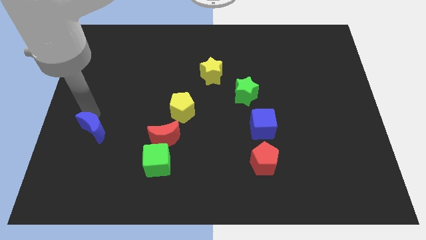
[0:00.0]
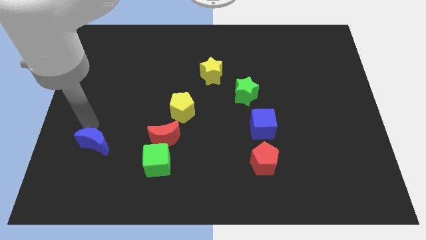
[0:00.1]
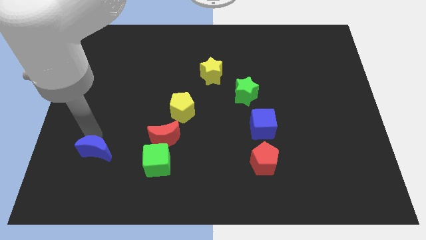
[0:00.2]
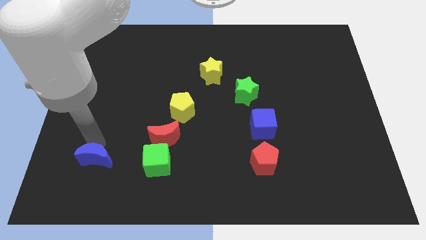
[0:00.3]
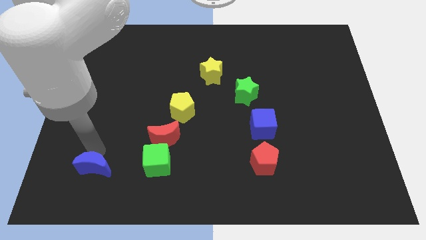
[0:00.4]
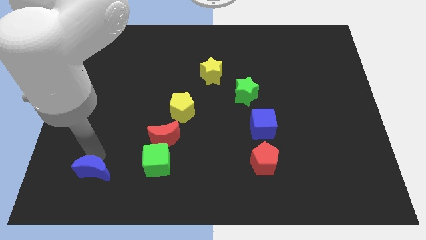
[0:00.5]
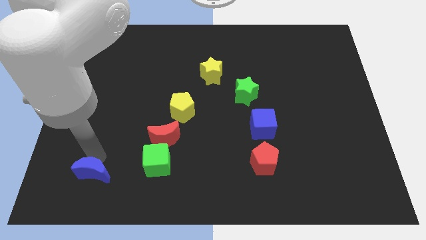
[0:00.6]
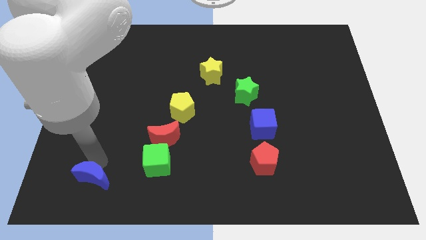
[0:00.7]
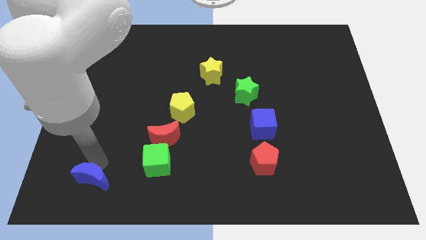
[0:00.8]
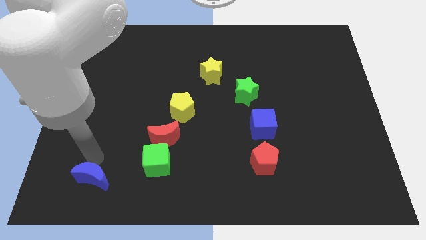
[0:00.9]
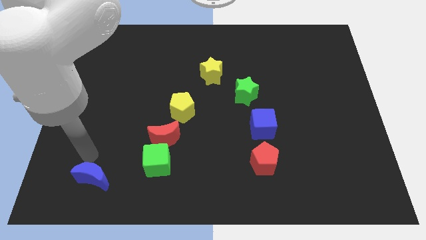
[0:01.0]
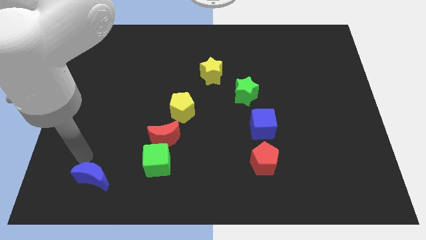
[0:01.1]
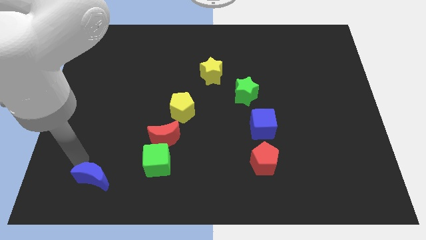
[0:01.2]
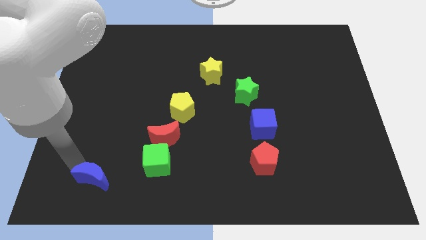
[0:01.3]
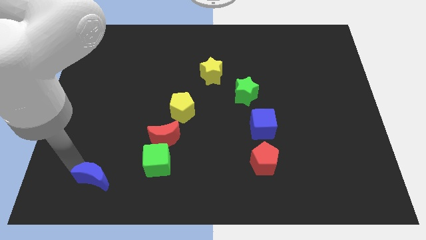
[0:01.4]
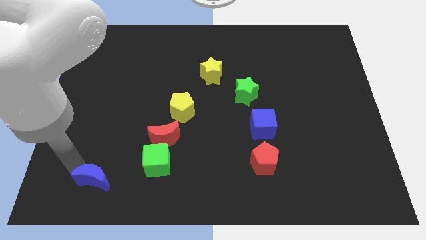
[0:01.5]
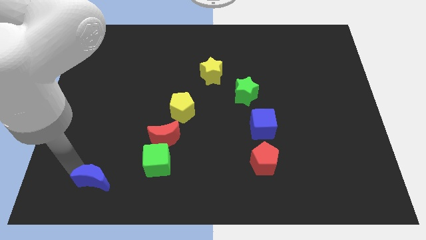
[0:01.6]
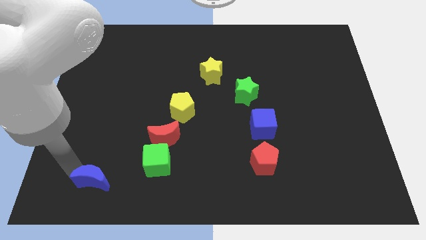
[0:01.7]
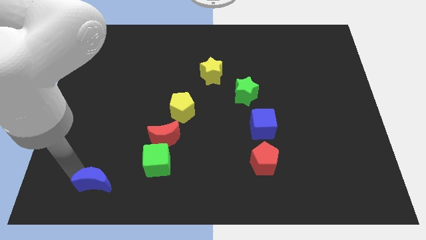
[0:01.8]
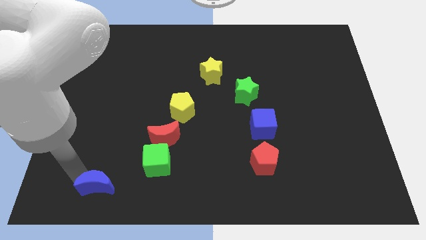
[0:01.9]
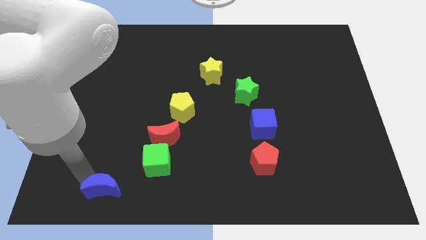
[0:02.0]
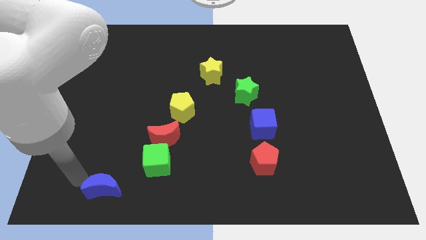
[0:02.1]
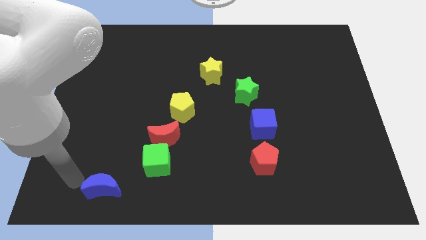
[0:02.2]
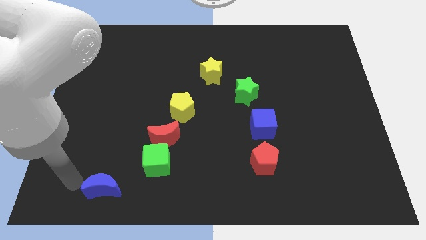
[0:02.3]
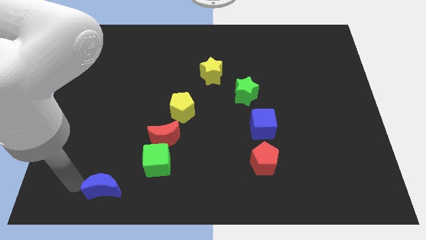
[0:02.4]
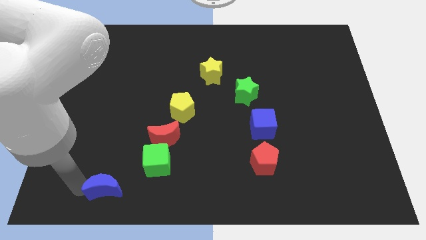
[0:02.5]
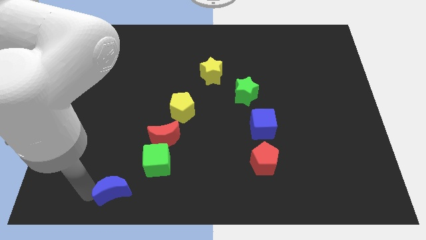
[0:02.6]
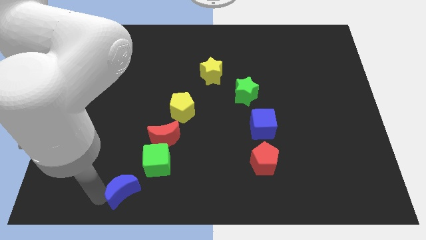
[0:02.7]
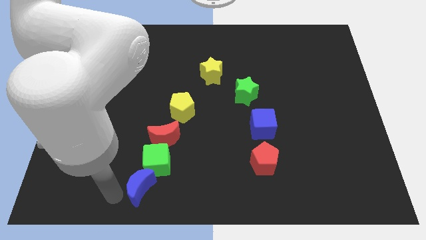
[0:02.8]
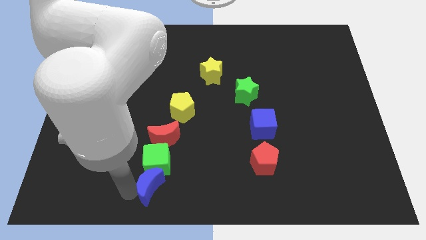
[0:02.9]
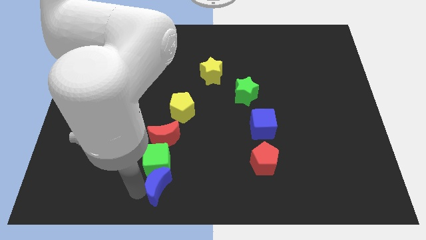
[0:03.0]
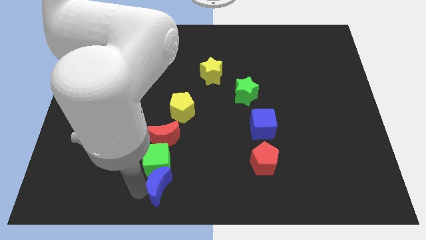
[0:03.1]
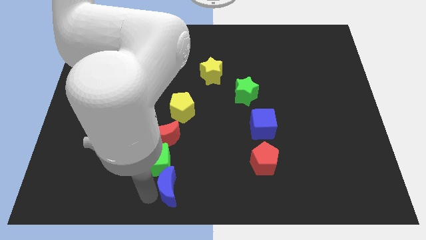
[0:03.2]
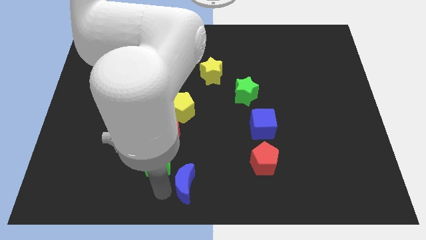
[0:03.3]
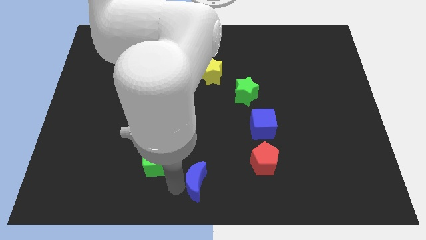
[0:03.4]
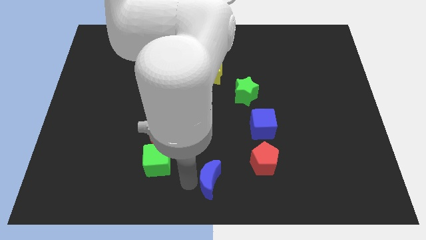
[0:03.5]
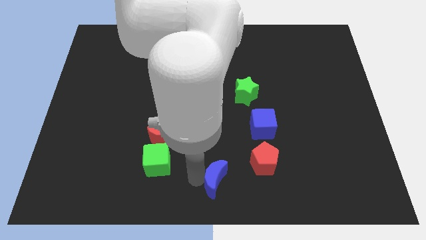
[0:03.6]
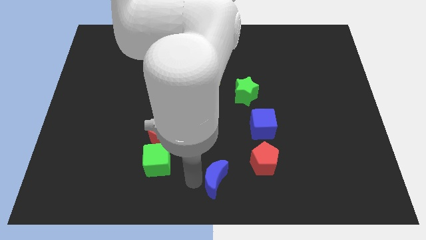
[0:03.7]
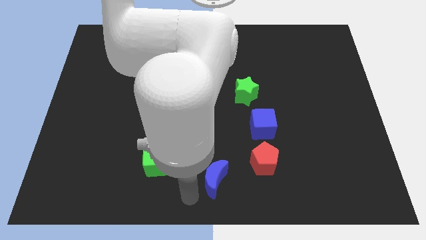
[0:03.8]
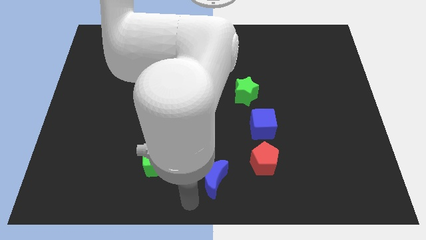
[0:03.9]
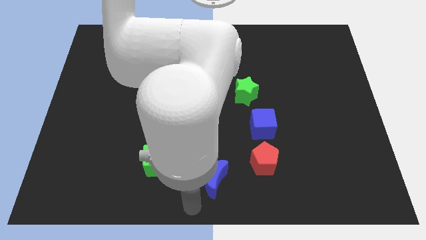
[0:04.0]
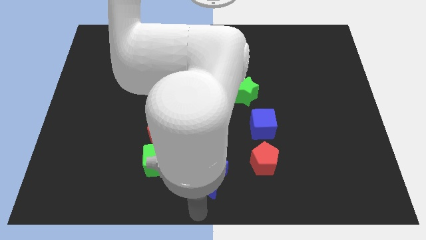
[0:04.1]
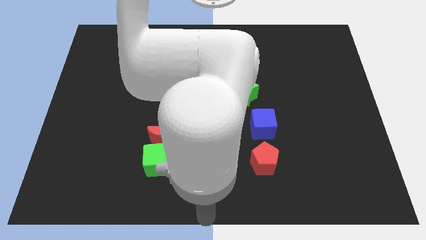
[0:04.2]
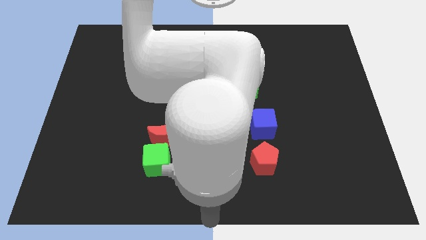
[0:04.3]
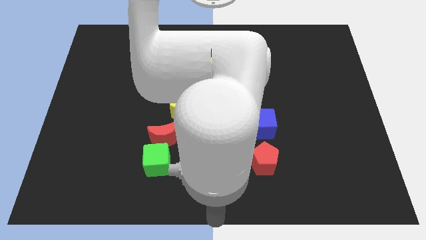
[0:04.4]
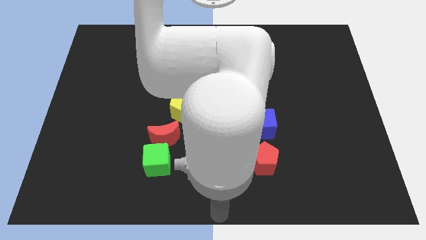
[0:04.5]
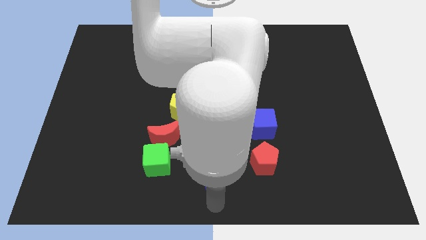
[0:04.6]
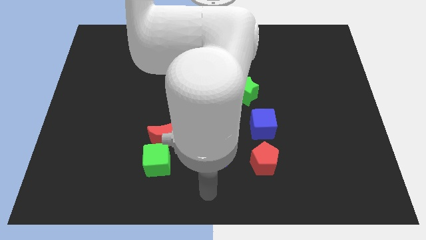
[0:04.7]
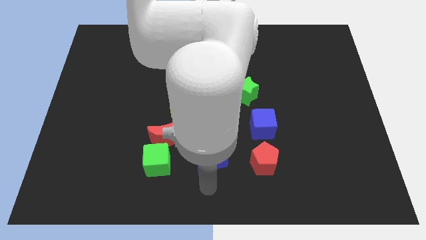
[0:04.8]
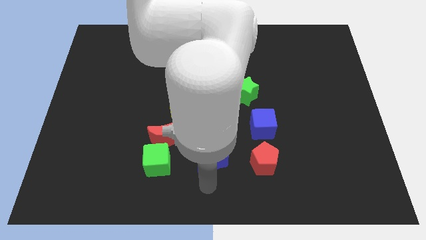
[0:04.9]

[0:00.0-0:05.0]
place the blue crescent in between the green cube and red pentagon

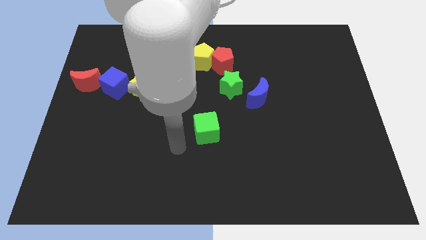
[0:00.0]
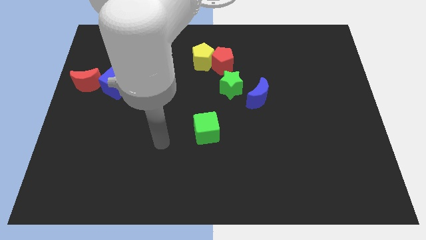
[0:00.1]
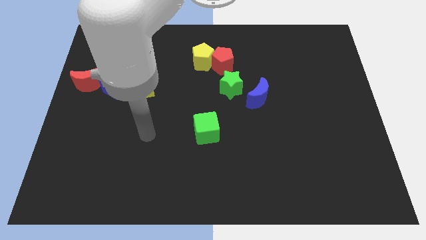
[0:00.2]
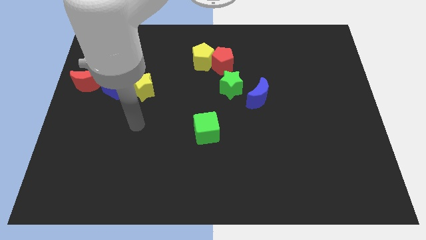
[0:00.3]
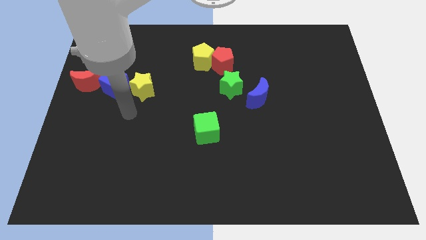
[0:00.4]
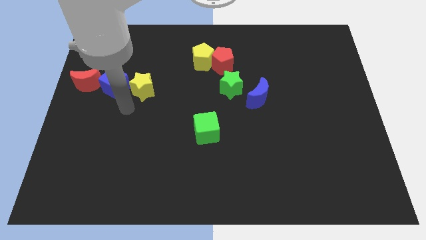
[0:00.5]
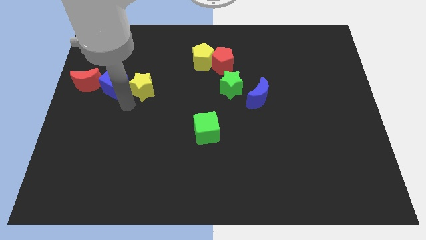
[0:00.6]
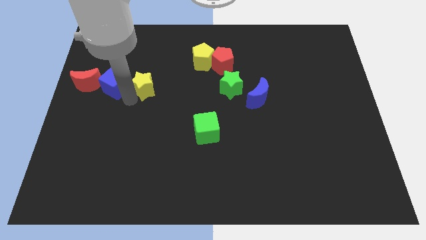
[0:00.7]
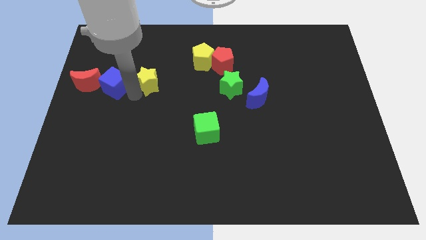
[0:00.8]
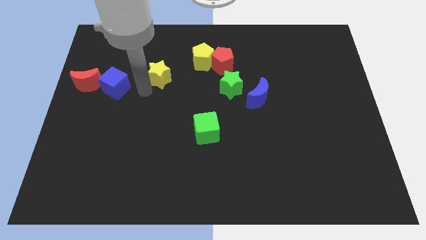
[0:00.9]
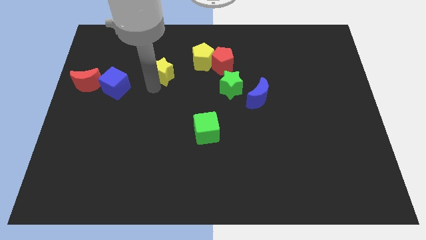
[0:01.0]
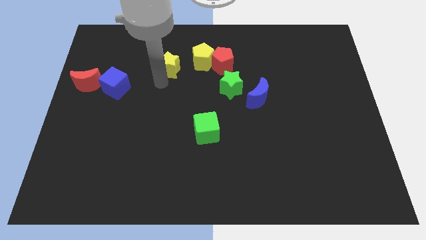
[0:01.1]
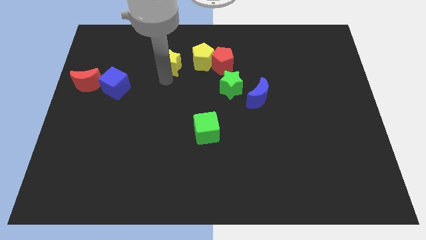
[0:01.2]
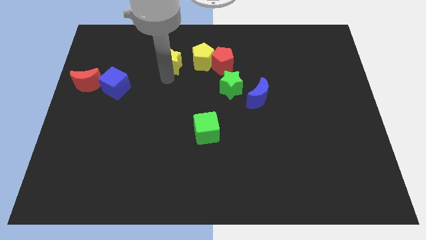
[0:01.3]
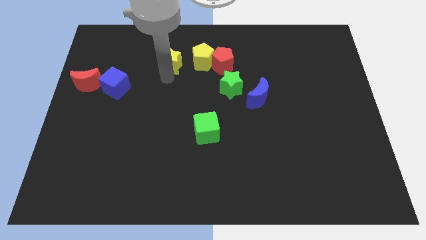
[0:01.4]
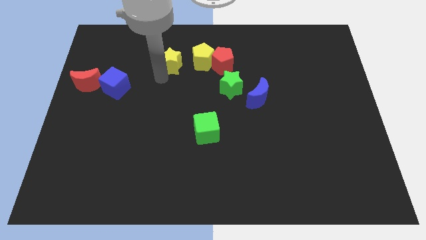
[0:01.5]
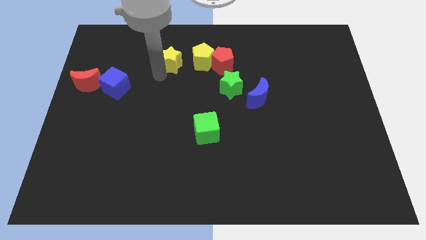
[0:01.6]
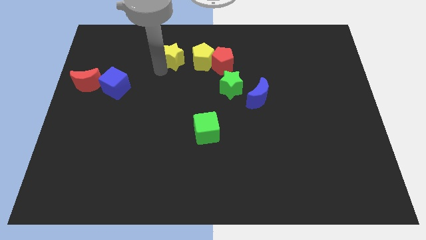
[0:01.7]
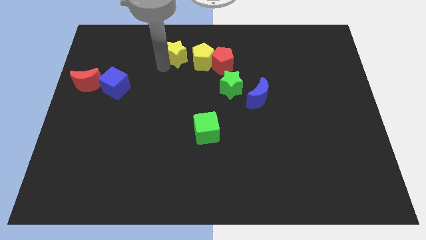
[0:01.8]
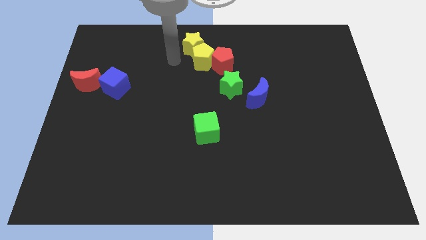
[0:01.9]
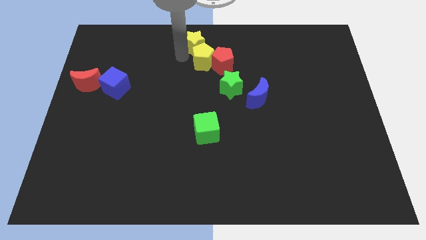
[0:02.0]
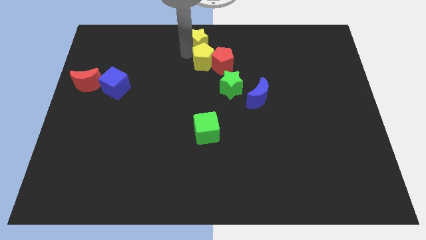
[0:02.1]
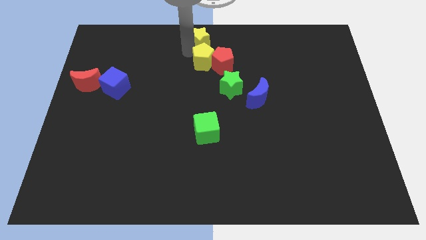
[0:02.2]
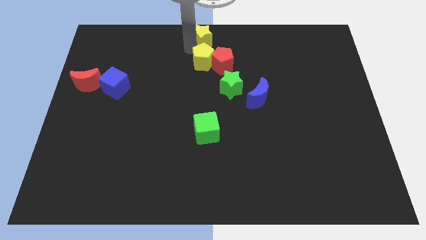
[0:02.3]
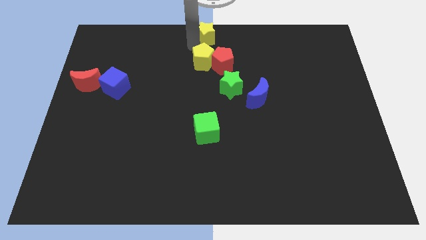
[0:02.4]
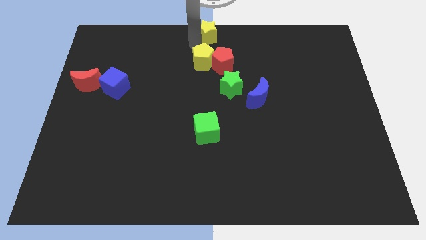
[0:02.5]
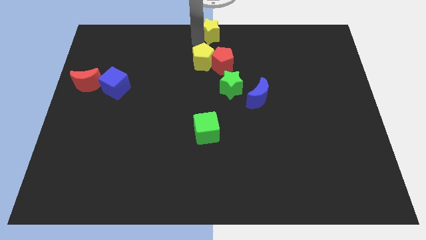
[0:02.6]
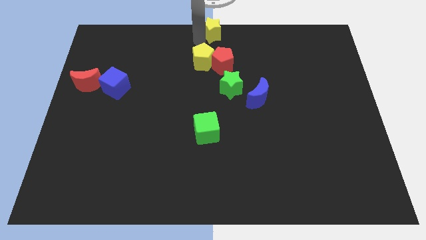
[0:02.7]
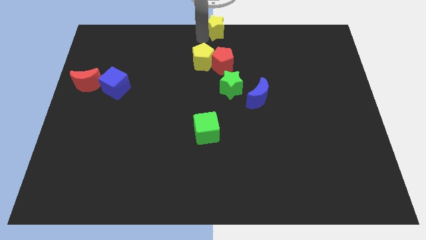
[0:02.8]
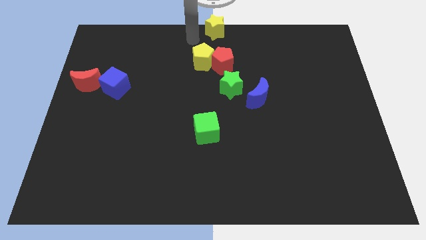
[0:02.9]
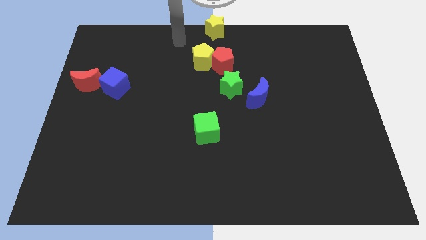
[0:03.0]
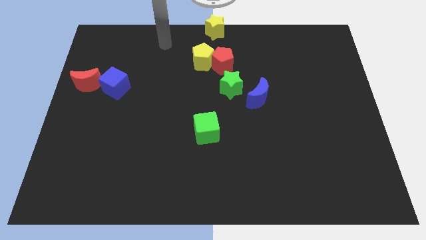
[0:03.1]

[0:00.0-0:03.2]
place yellow star towards top center of the board

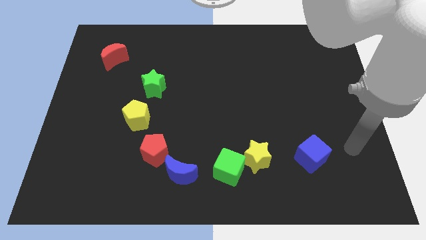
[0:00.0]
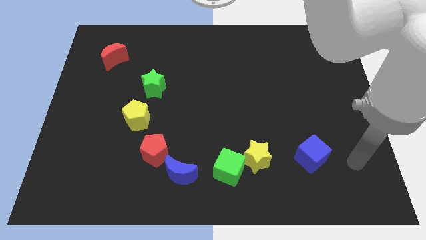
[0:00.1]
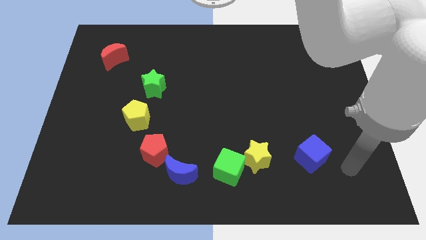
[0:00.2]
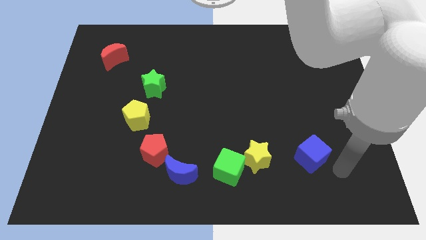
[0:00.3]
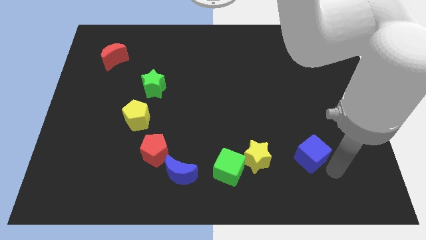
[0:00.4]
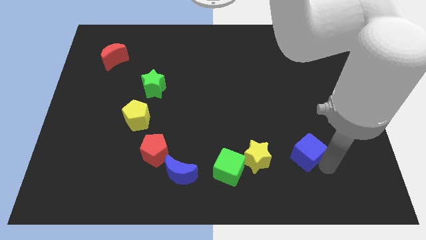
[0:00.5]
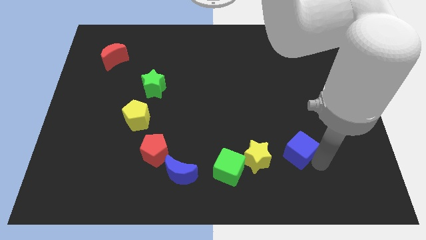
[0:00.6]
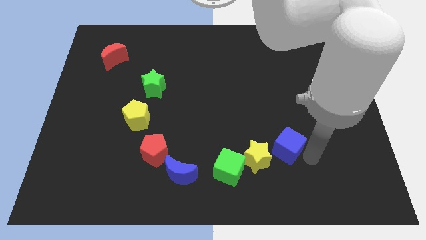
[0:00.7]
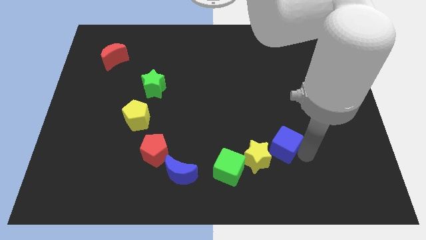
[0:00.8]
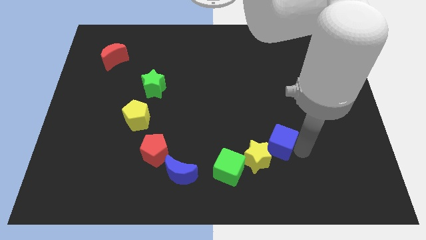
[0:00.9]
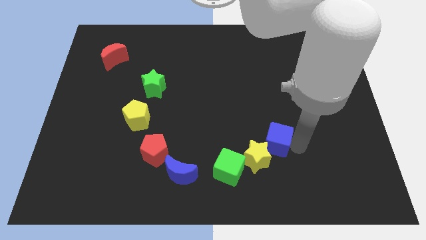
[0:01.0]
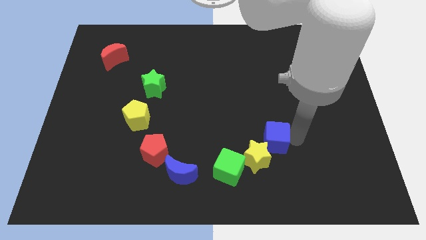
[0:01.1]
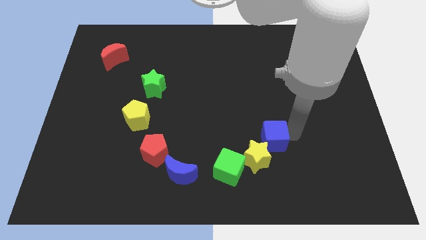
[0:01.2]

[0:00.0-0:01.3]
put the blue cube at the top right corner of the yellow star
